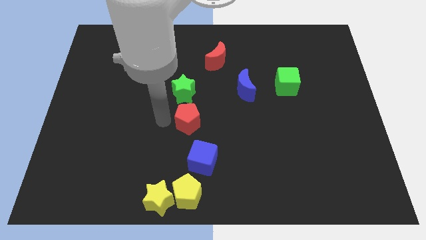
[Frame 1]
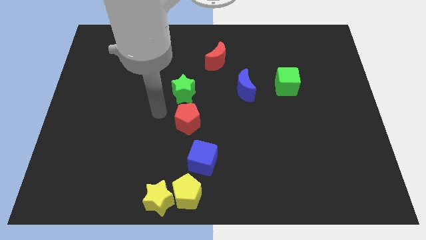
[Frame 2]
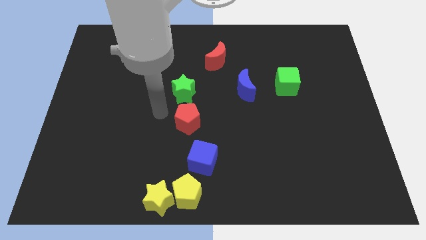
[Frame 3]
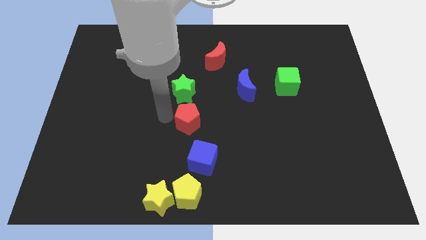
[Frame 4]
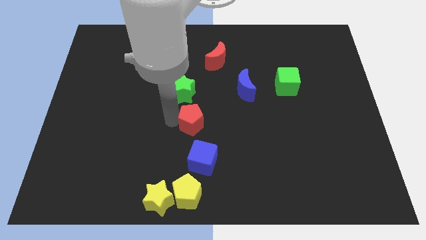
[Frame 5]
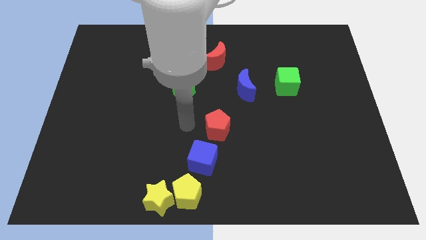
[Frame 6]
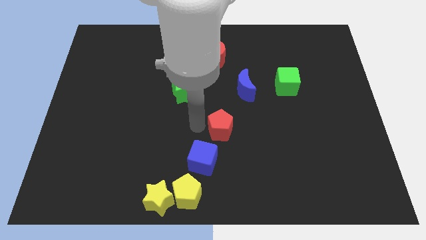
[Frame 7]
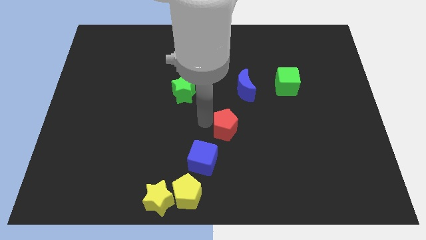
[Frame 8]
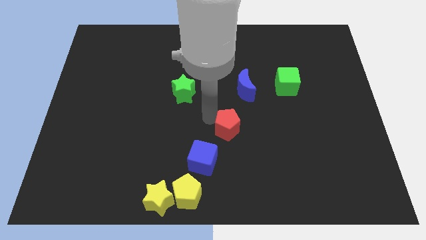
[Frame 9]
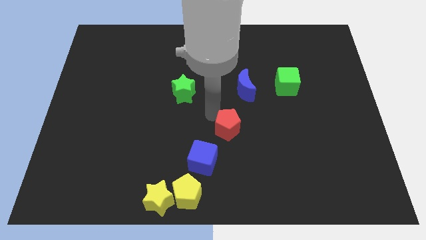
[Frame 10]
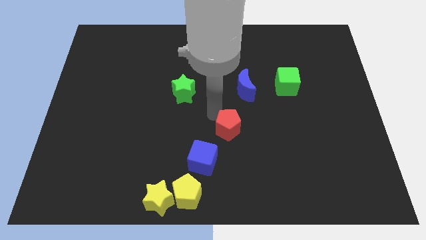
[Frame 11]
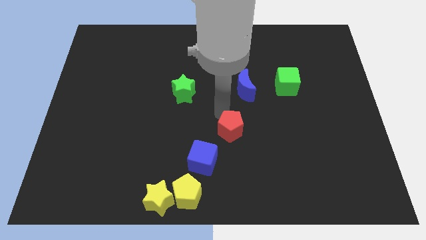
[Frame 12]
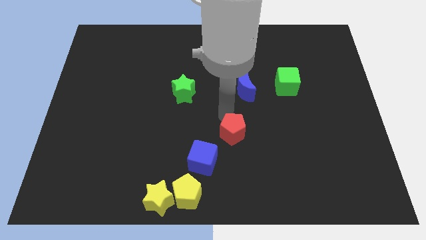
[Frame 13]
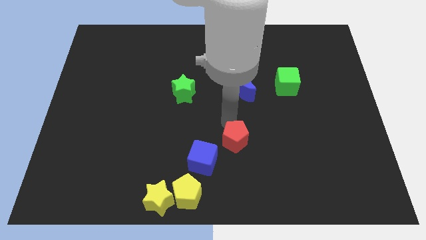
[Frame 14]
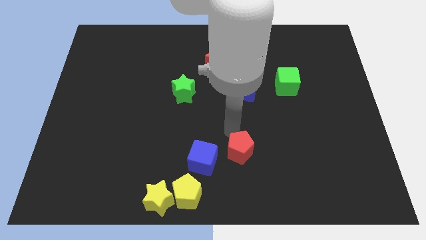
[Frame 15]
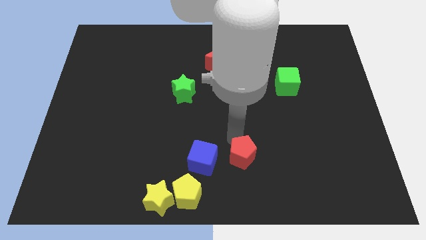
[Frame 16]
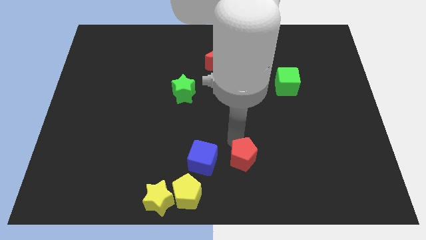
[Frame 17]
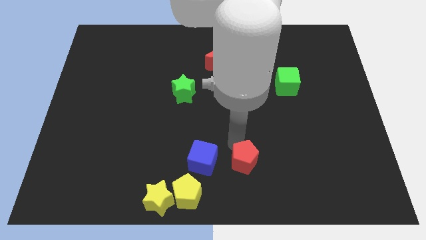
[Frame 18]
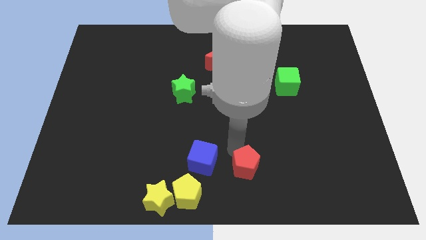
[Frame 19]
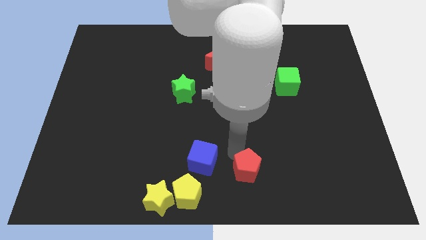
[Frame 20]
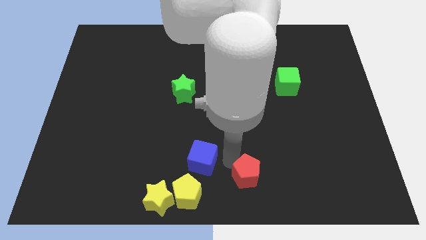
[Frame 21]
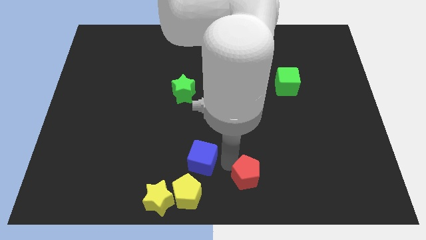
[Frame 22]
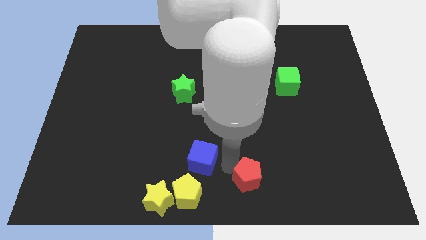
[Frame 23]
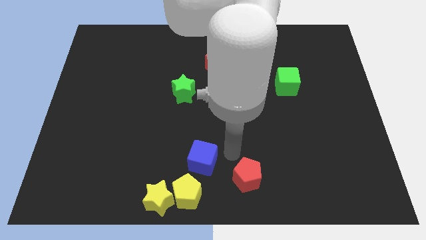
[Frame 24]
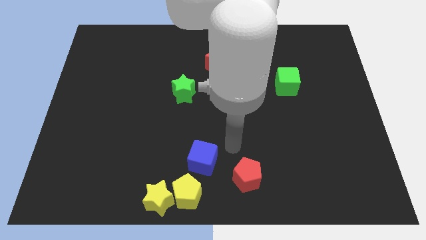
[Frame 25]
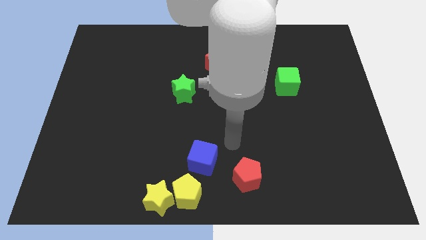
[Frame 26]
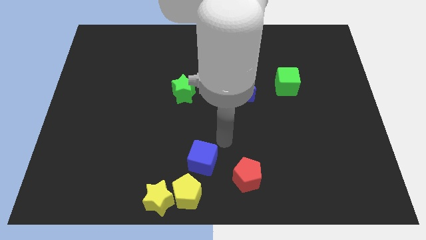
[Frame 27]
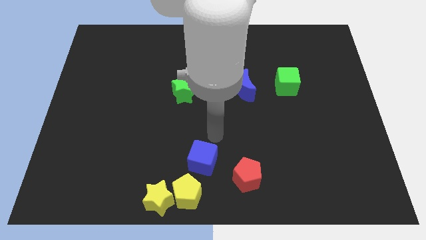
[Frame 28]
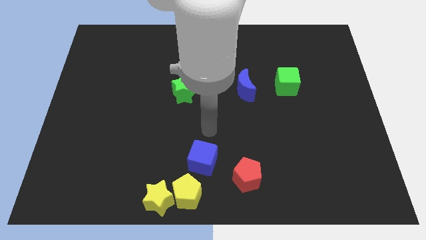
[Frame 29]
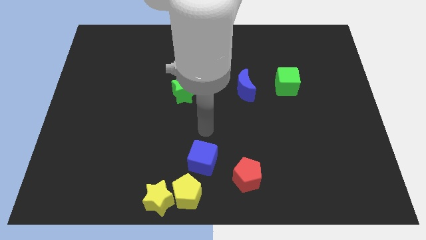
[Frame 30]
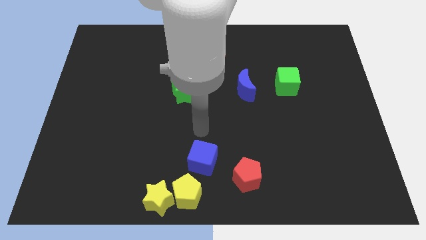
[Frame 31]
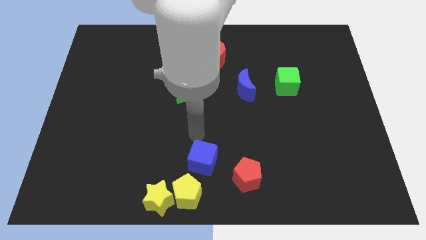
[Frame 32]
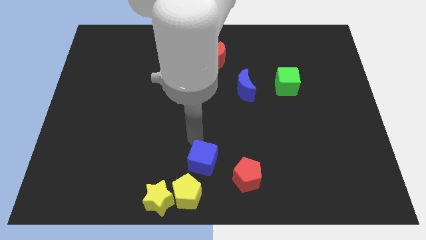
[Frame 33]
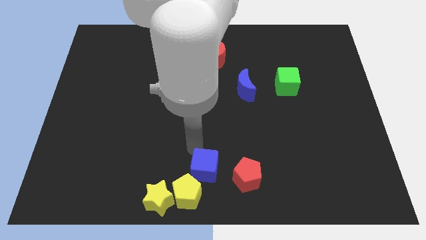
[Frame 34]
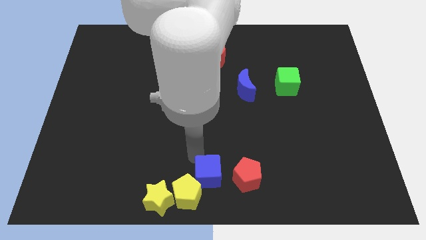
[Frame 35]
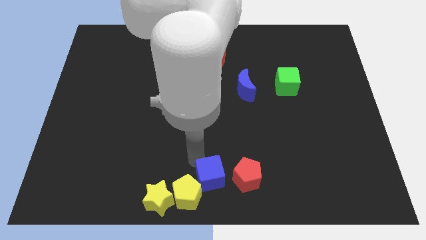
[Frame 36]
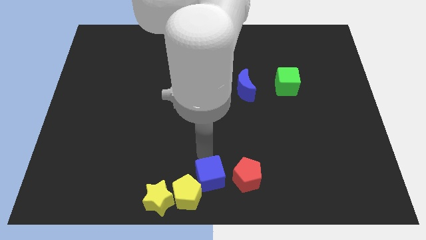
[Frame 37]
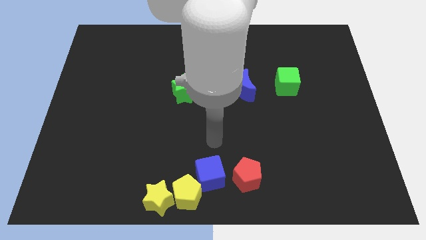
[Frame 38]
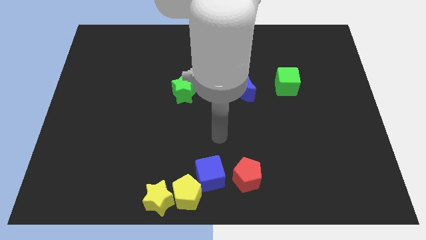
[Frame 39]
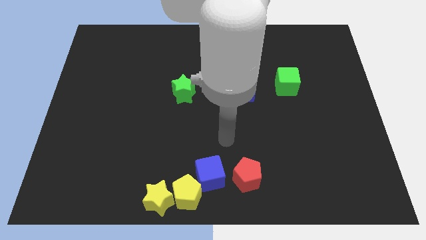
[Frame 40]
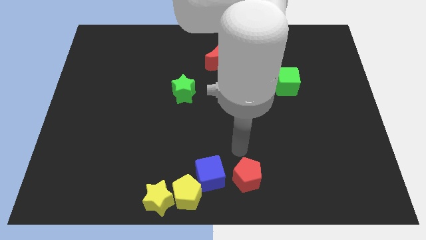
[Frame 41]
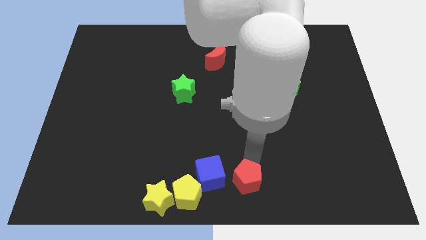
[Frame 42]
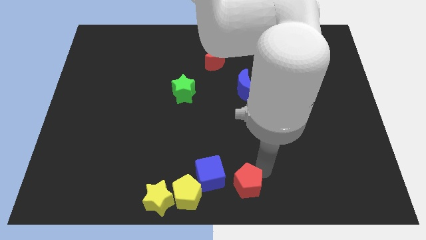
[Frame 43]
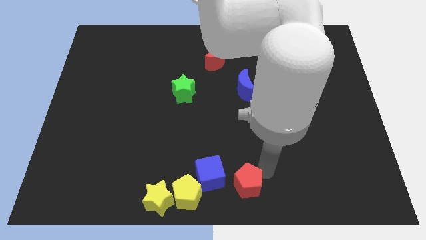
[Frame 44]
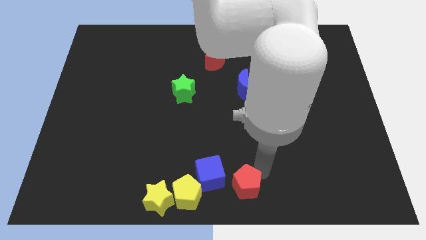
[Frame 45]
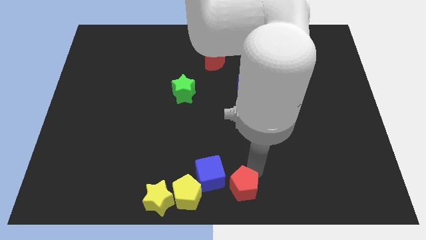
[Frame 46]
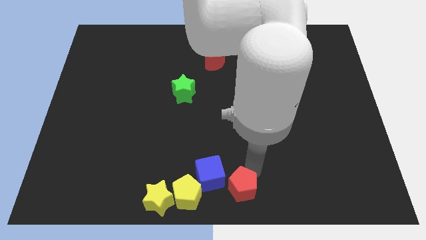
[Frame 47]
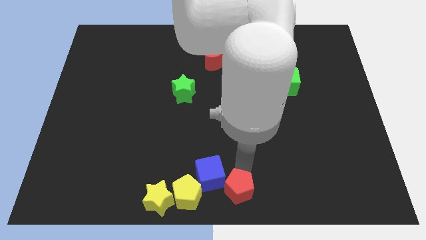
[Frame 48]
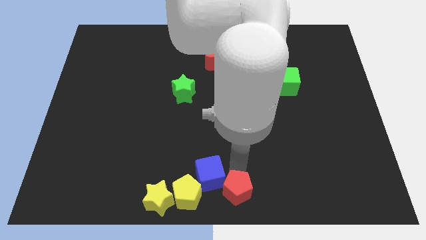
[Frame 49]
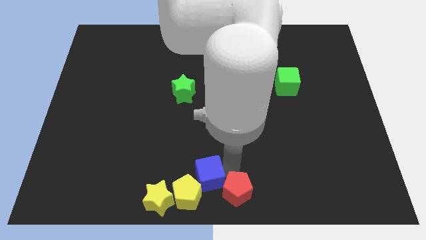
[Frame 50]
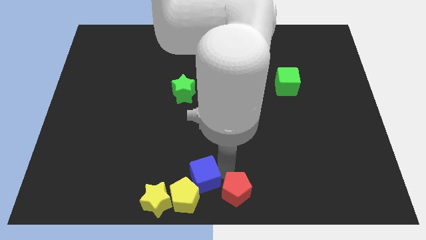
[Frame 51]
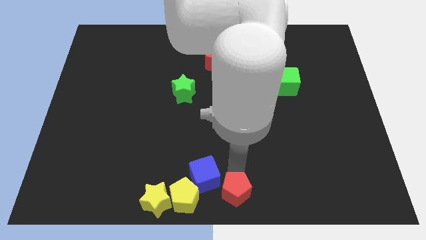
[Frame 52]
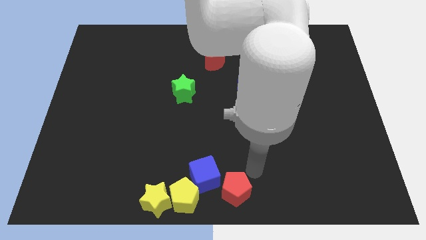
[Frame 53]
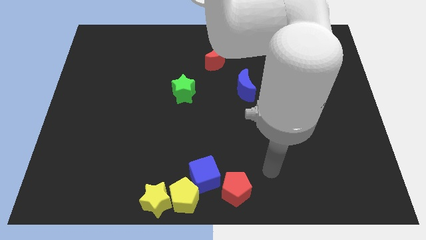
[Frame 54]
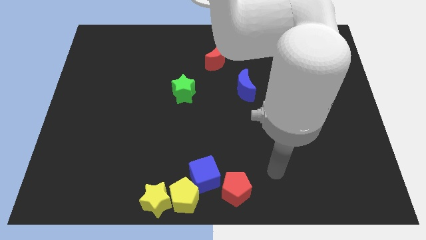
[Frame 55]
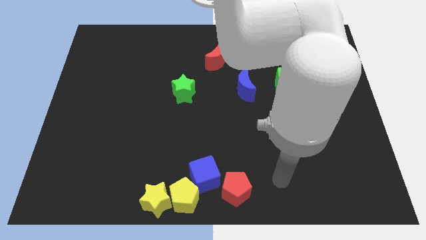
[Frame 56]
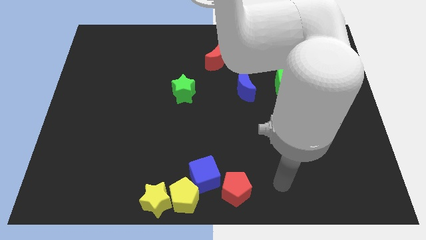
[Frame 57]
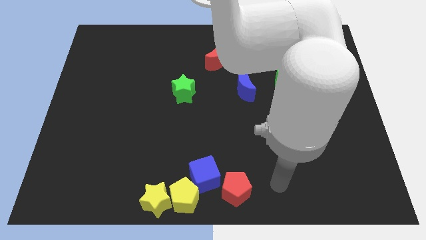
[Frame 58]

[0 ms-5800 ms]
push the red pentagon and blue cube to the bottom center

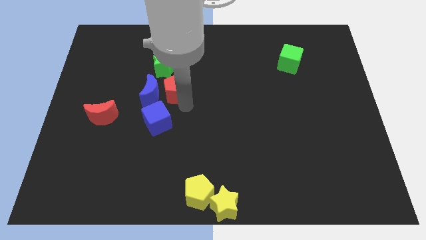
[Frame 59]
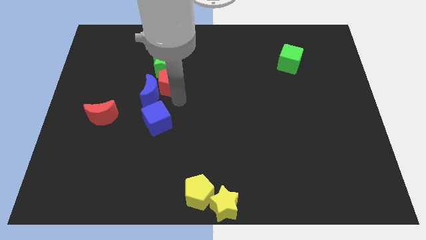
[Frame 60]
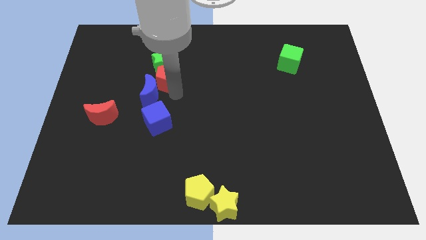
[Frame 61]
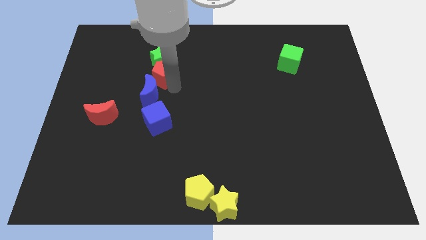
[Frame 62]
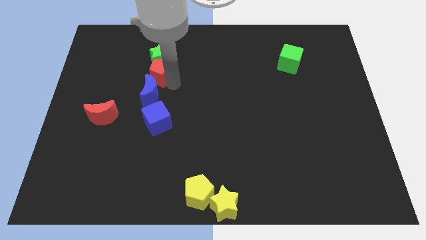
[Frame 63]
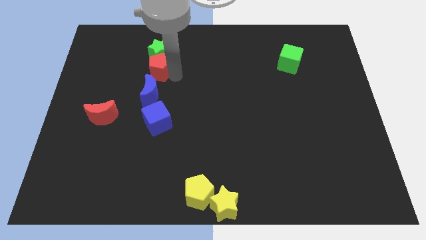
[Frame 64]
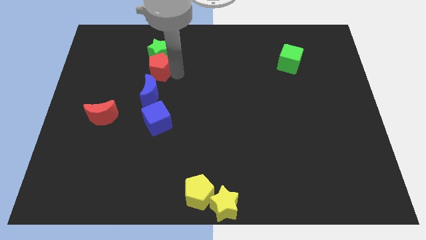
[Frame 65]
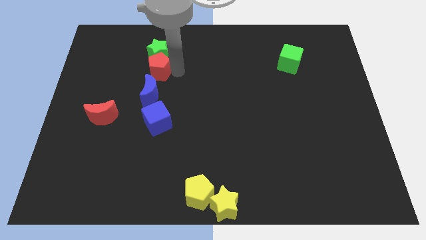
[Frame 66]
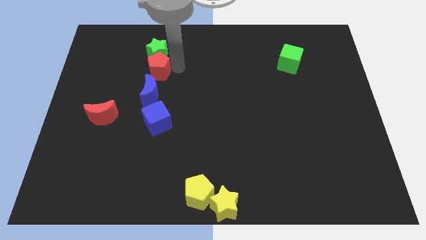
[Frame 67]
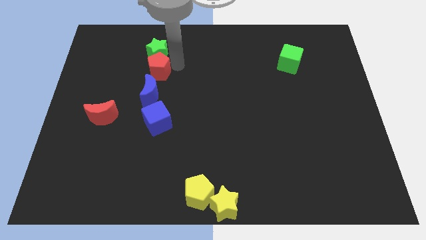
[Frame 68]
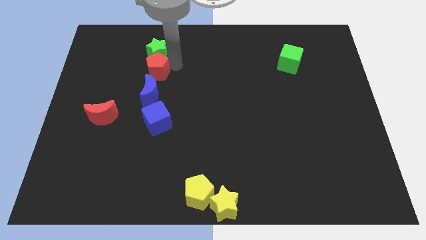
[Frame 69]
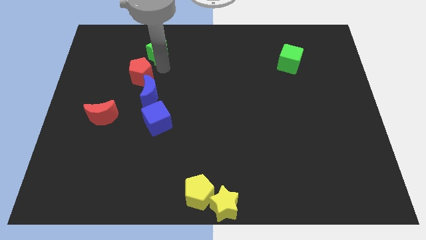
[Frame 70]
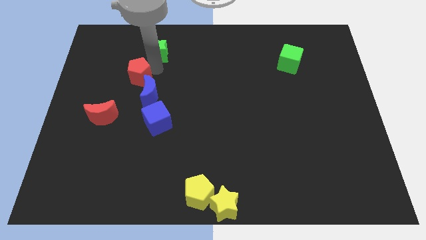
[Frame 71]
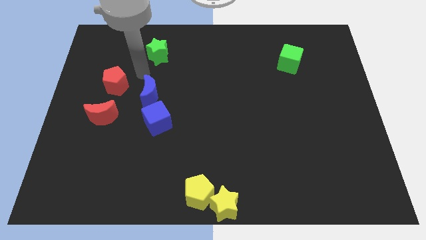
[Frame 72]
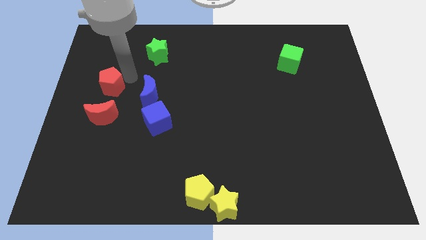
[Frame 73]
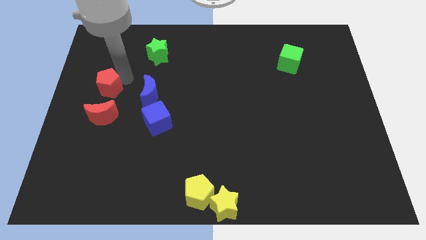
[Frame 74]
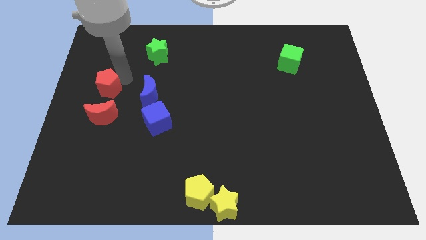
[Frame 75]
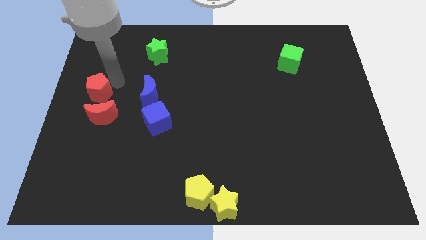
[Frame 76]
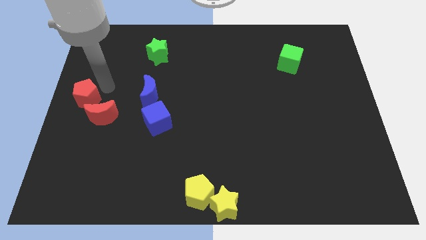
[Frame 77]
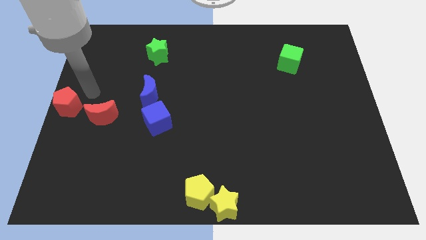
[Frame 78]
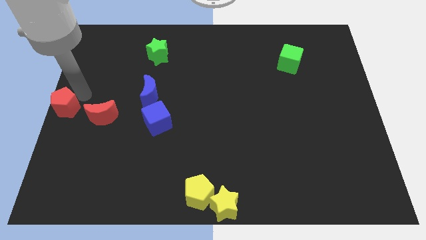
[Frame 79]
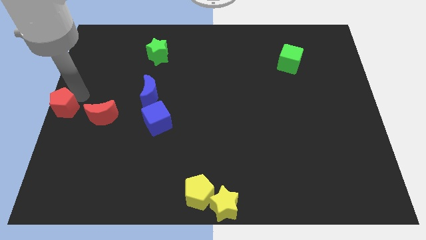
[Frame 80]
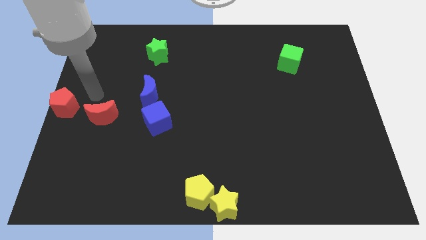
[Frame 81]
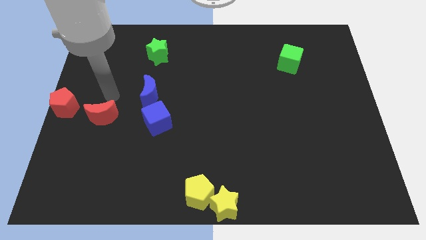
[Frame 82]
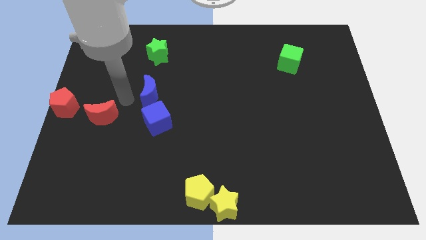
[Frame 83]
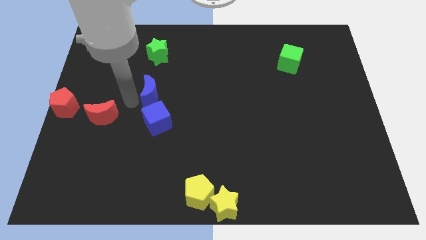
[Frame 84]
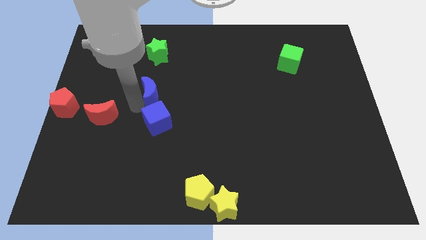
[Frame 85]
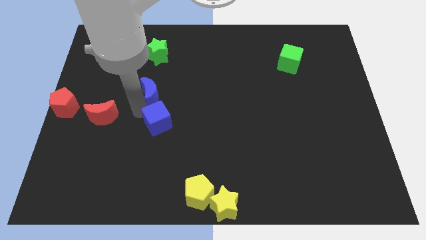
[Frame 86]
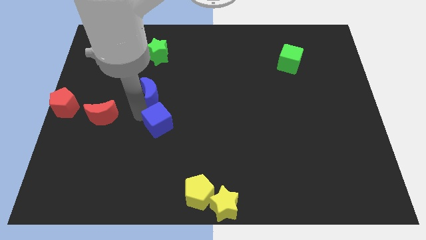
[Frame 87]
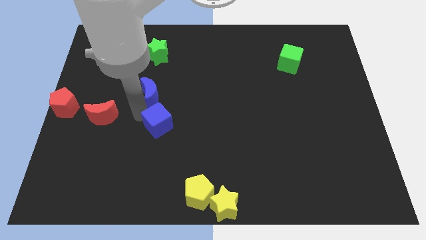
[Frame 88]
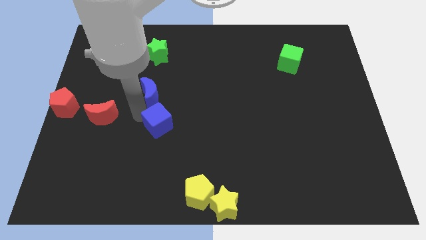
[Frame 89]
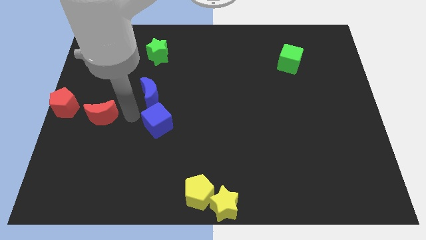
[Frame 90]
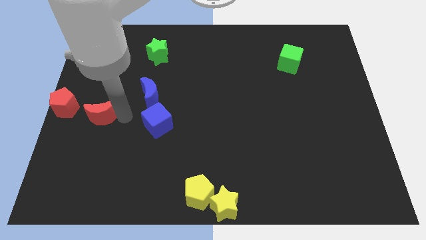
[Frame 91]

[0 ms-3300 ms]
slide the red pentagon into the center left
